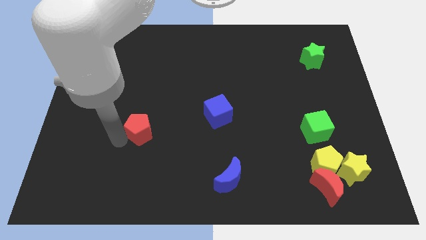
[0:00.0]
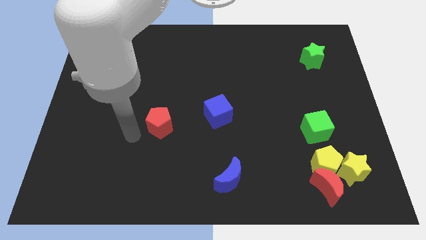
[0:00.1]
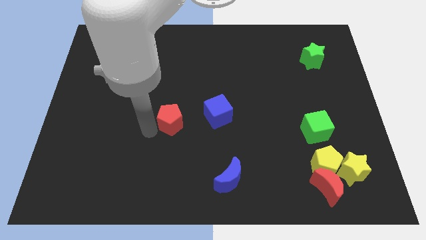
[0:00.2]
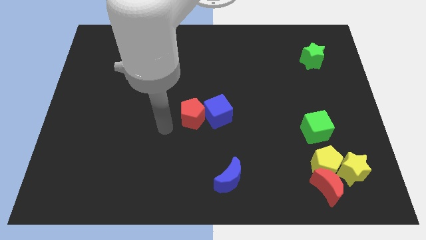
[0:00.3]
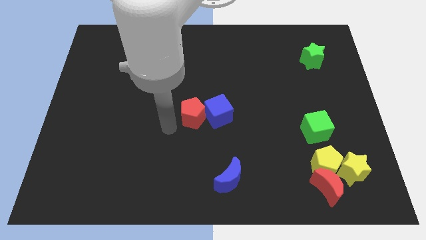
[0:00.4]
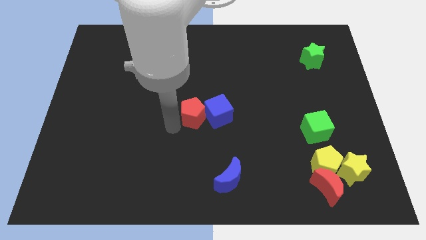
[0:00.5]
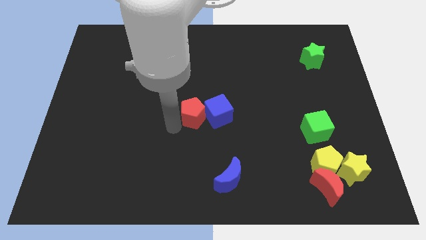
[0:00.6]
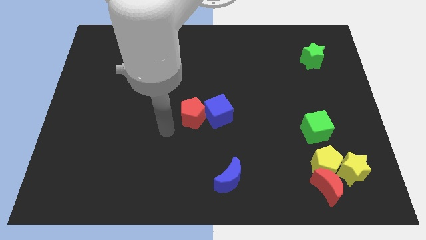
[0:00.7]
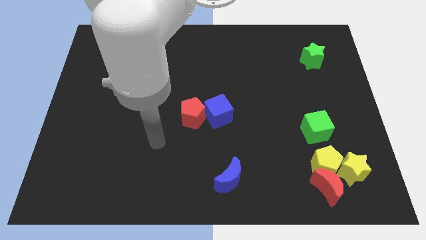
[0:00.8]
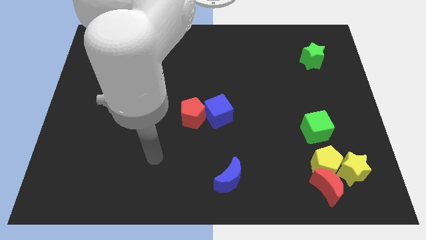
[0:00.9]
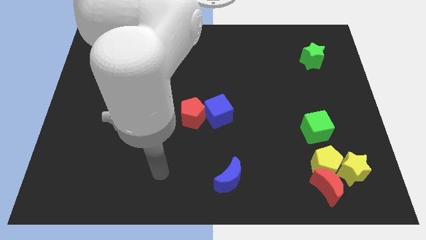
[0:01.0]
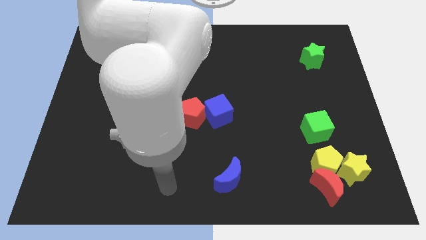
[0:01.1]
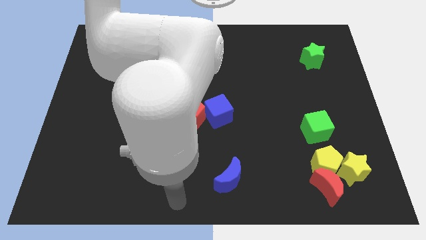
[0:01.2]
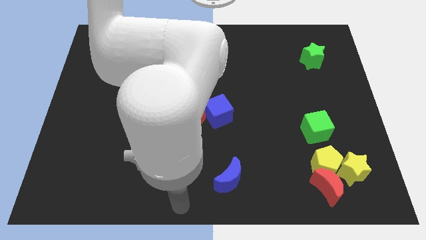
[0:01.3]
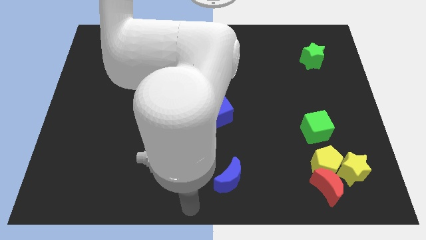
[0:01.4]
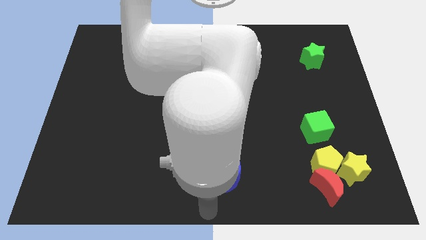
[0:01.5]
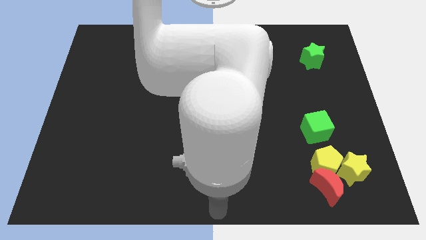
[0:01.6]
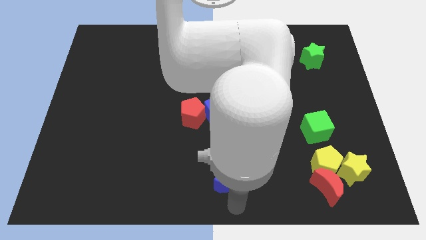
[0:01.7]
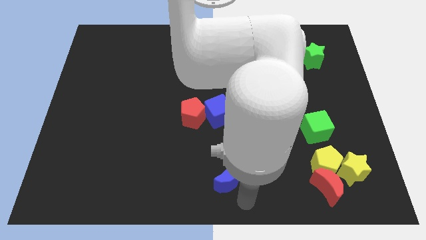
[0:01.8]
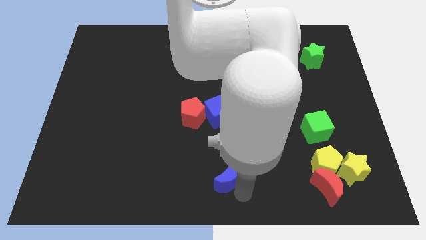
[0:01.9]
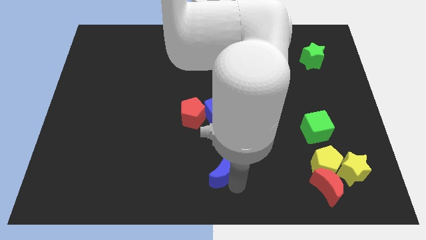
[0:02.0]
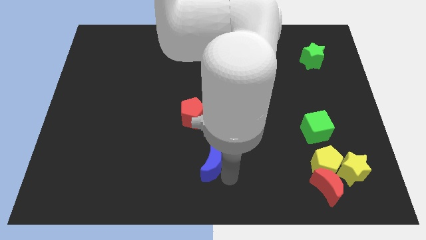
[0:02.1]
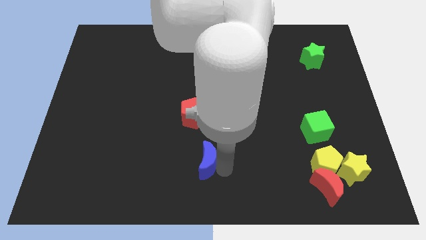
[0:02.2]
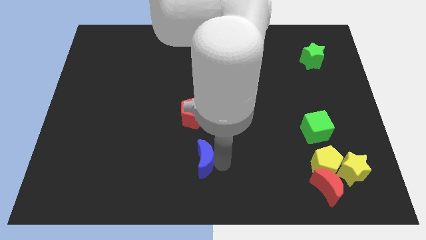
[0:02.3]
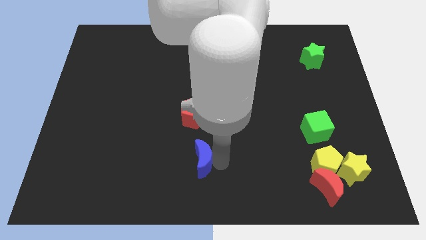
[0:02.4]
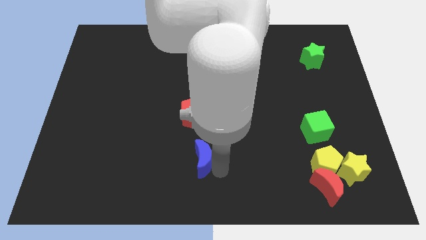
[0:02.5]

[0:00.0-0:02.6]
push blue crescent below red pentagon

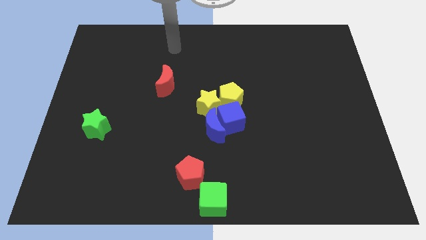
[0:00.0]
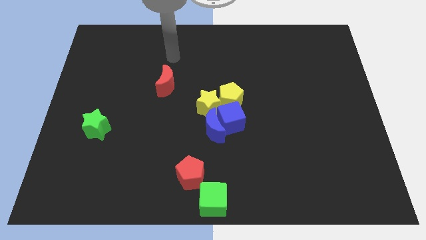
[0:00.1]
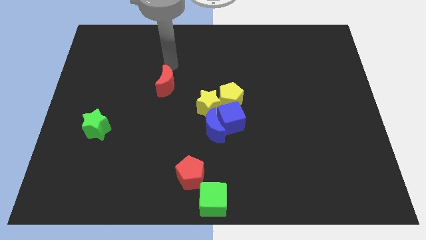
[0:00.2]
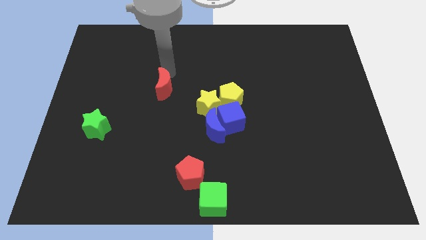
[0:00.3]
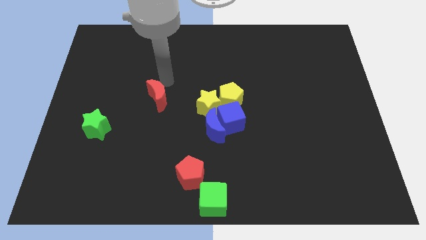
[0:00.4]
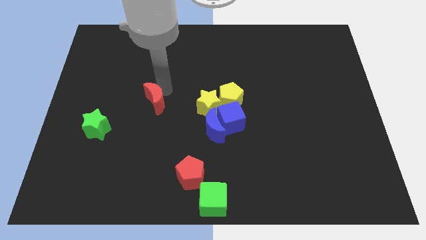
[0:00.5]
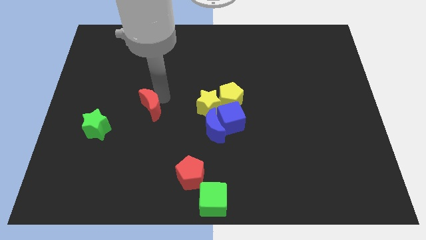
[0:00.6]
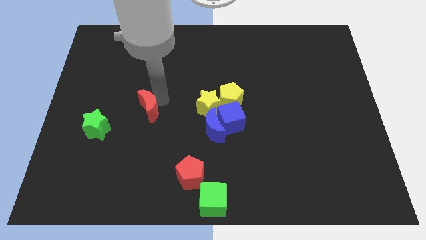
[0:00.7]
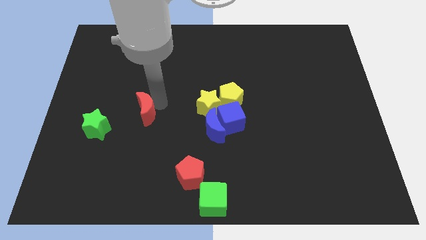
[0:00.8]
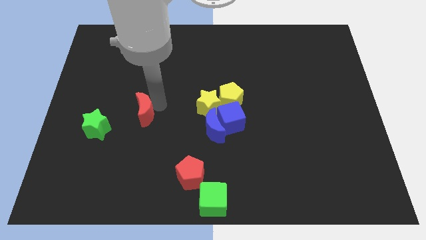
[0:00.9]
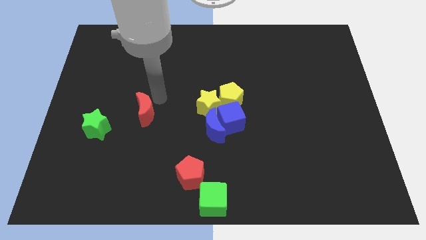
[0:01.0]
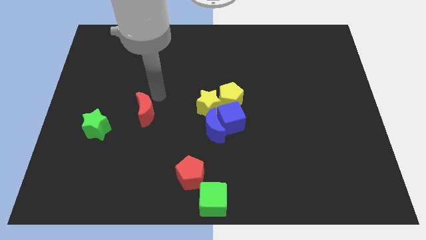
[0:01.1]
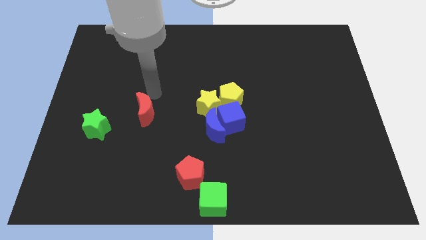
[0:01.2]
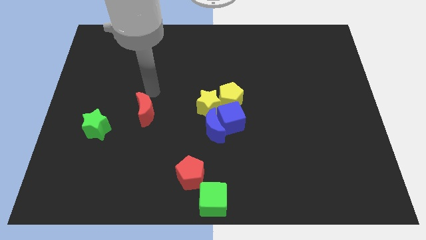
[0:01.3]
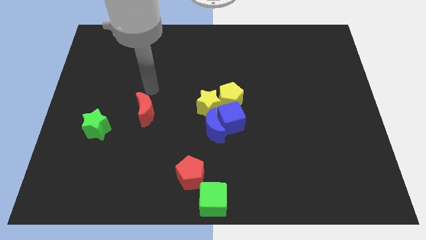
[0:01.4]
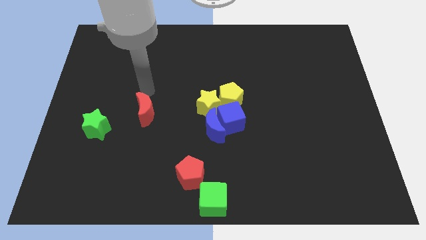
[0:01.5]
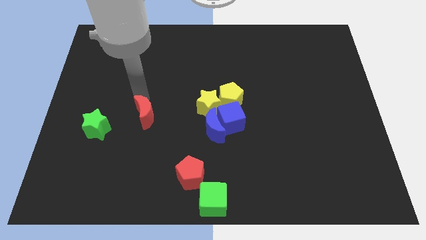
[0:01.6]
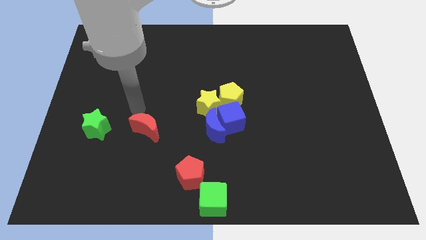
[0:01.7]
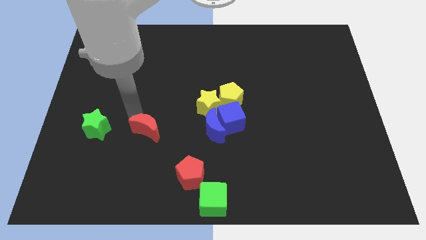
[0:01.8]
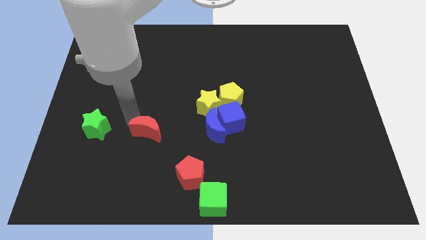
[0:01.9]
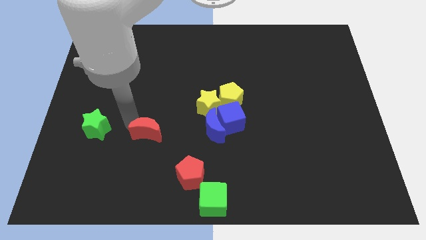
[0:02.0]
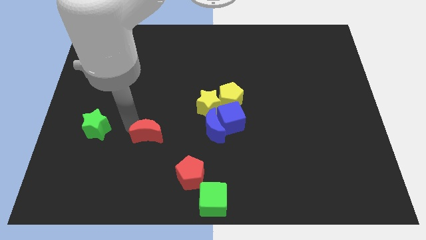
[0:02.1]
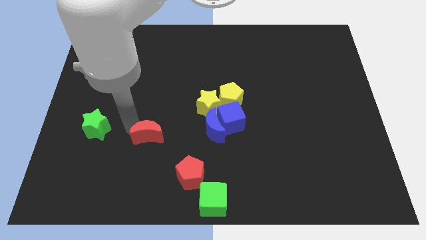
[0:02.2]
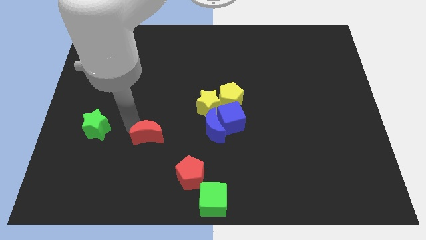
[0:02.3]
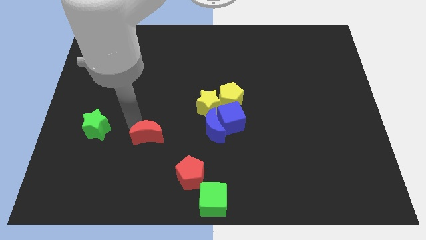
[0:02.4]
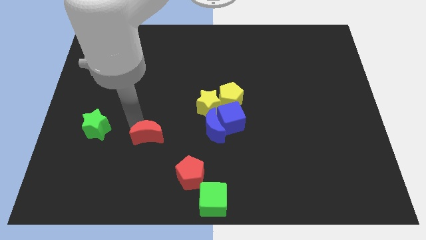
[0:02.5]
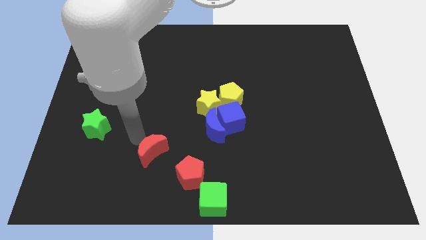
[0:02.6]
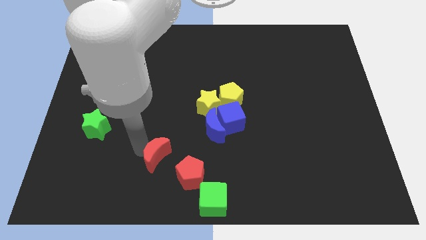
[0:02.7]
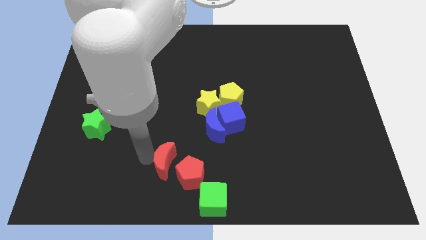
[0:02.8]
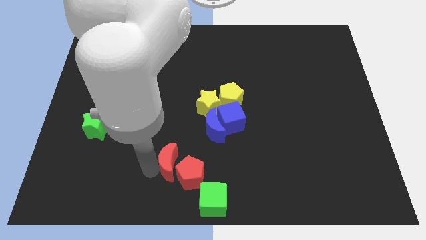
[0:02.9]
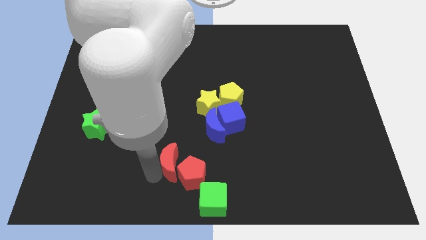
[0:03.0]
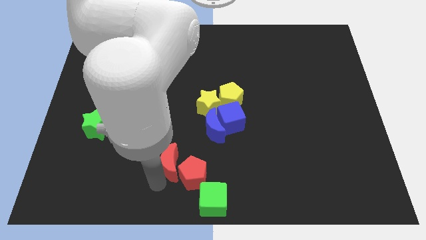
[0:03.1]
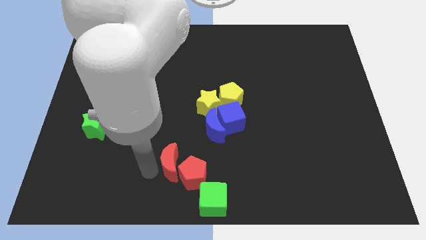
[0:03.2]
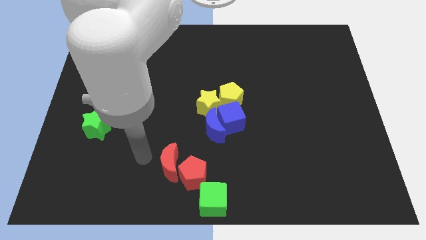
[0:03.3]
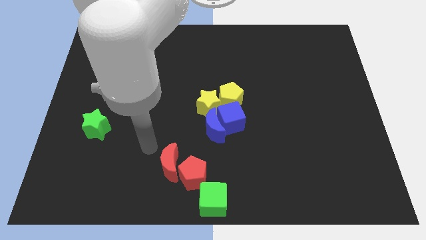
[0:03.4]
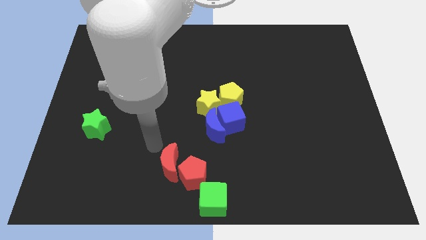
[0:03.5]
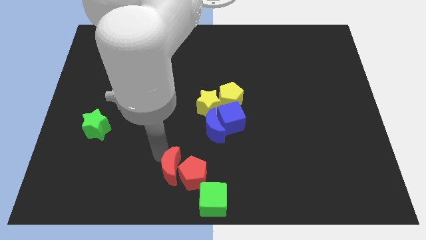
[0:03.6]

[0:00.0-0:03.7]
move the red crescent into red pentagon

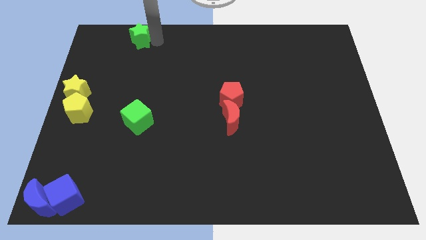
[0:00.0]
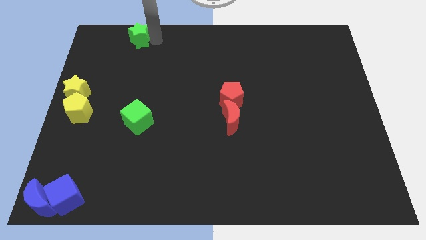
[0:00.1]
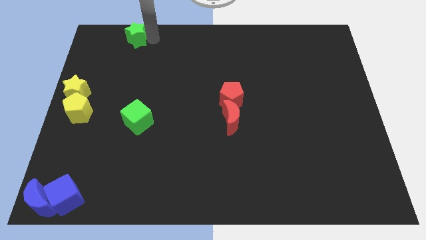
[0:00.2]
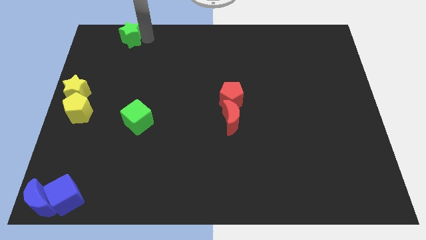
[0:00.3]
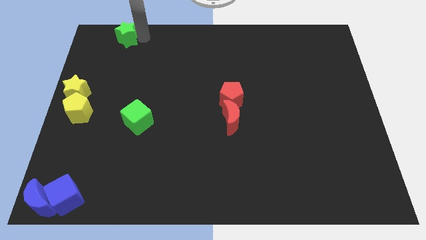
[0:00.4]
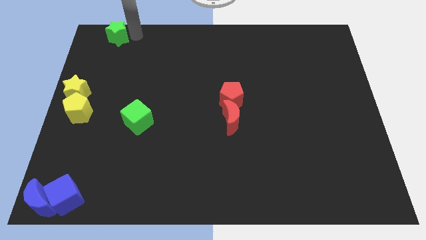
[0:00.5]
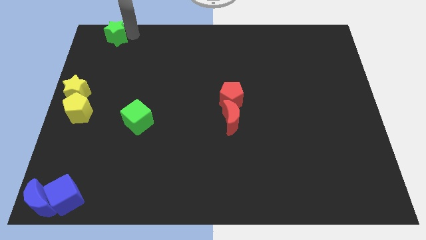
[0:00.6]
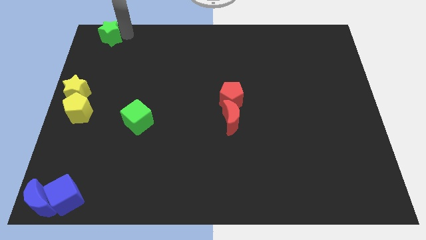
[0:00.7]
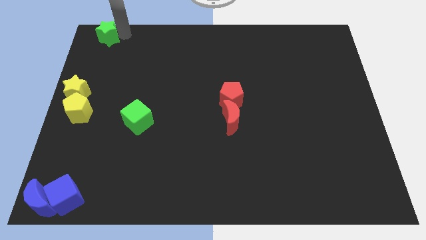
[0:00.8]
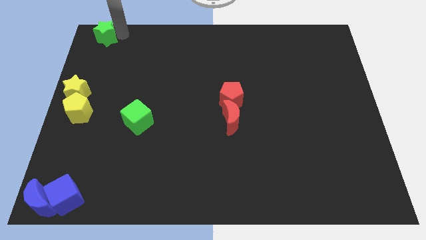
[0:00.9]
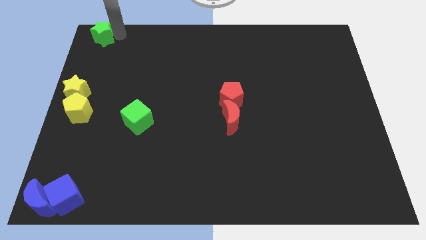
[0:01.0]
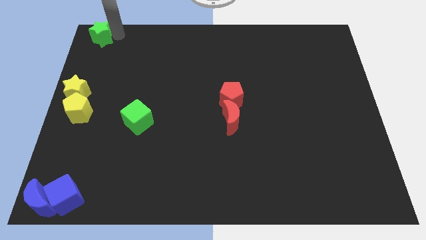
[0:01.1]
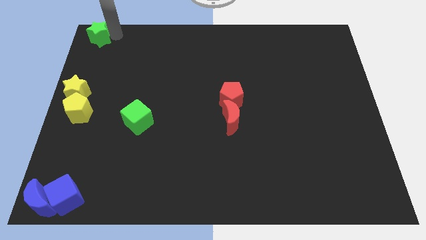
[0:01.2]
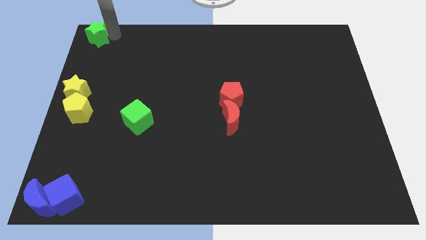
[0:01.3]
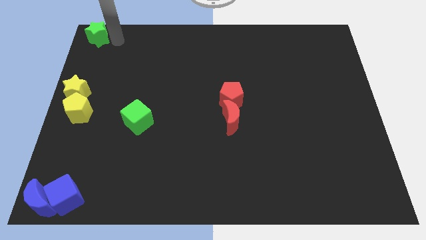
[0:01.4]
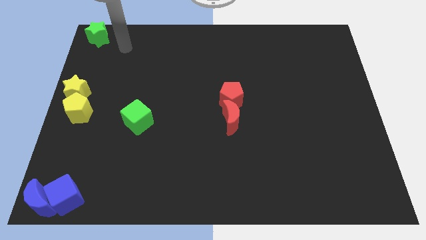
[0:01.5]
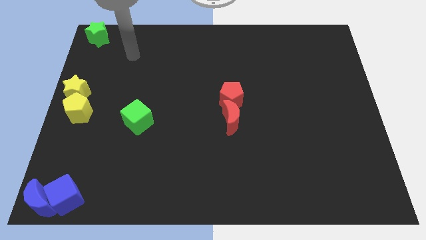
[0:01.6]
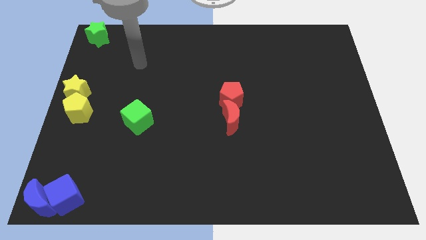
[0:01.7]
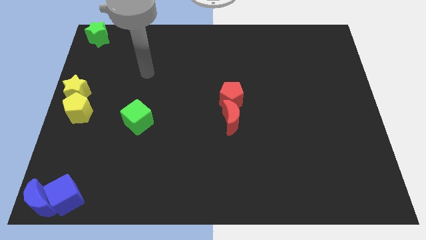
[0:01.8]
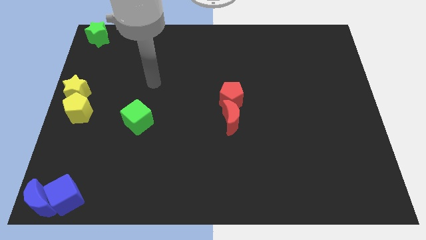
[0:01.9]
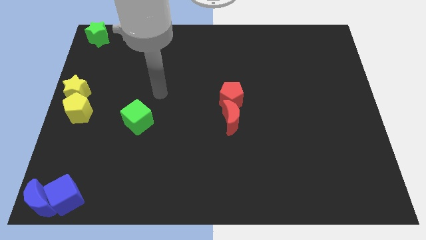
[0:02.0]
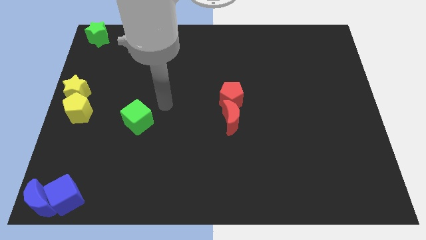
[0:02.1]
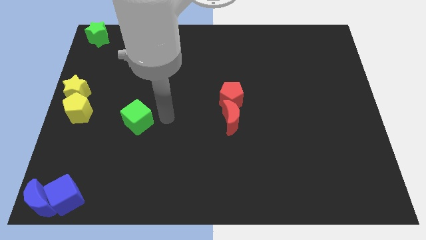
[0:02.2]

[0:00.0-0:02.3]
move the green star towards the top left corner of the board

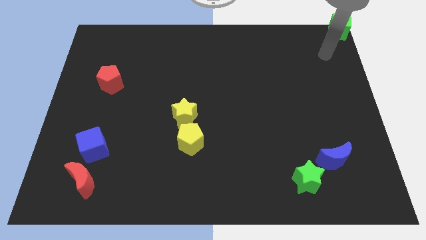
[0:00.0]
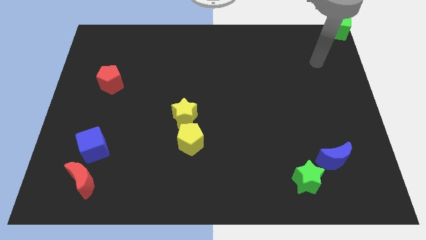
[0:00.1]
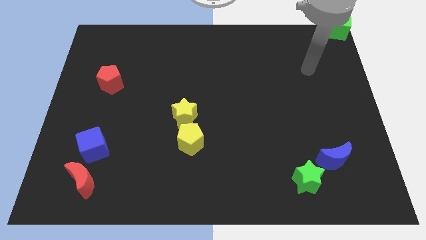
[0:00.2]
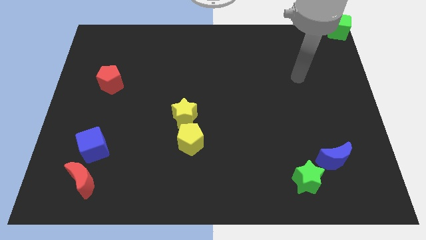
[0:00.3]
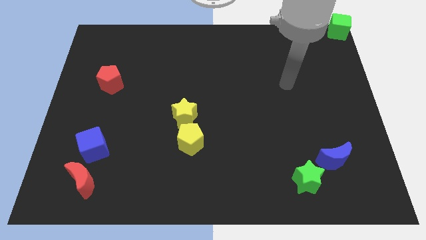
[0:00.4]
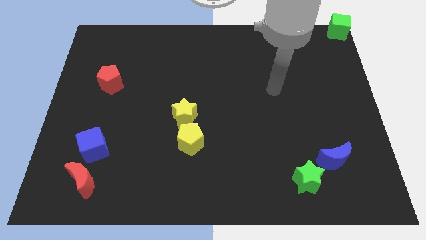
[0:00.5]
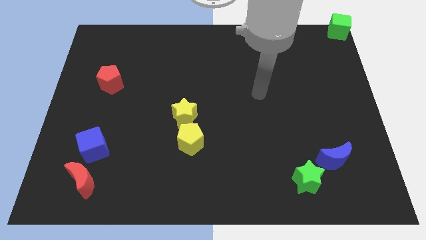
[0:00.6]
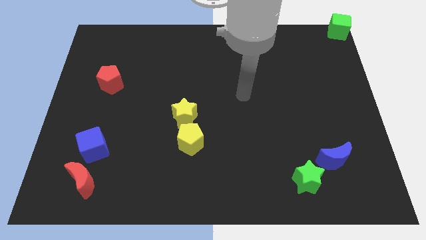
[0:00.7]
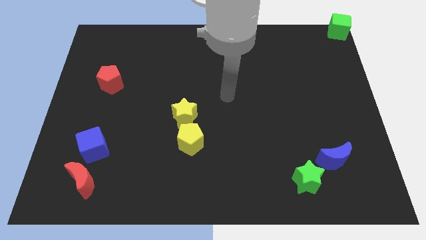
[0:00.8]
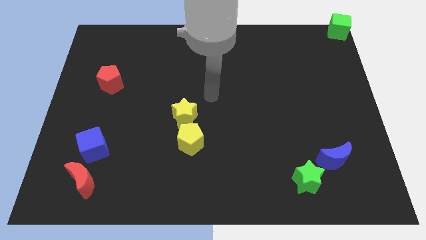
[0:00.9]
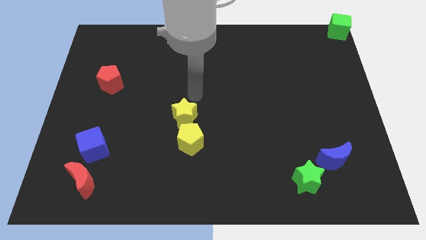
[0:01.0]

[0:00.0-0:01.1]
move the arm away from the green cube
